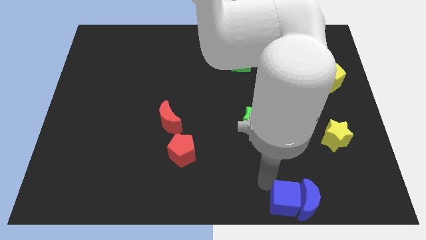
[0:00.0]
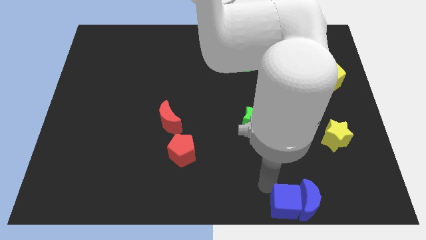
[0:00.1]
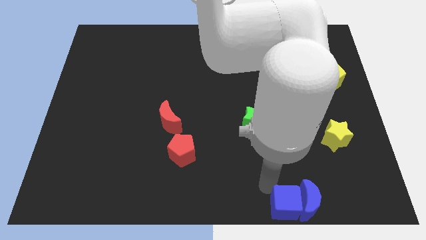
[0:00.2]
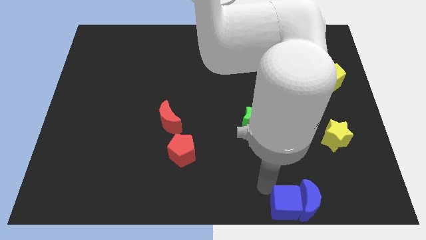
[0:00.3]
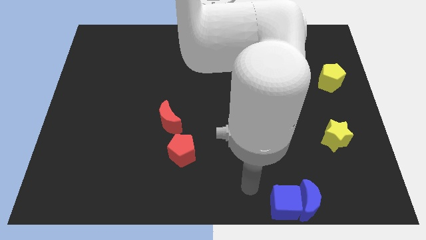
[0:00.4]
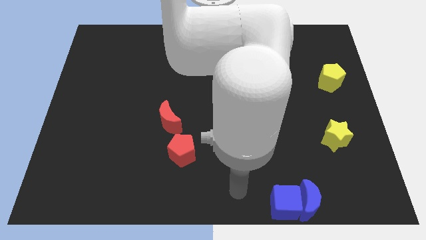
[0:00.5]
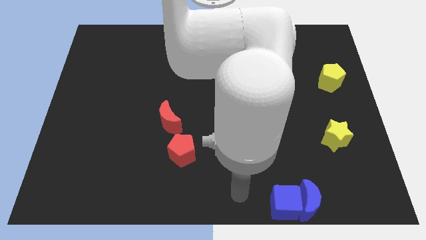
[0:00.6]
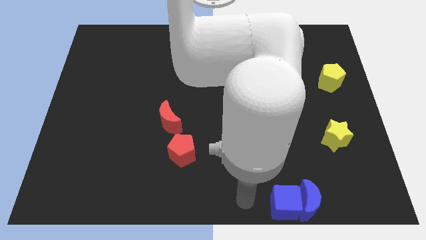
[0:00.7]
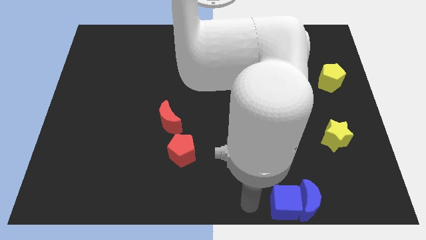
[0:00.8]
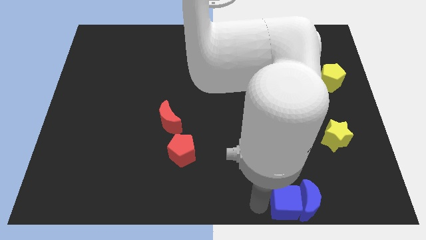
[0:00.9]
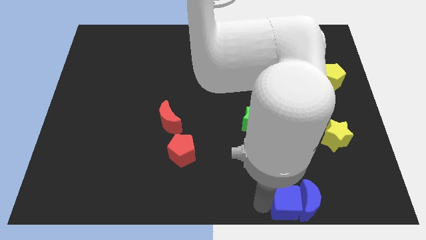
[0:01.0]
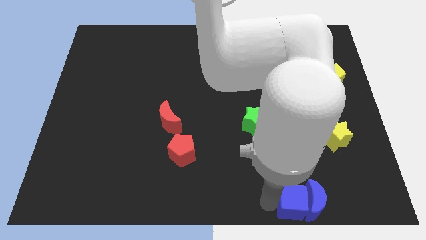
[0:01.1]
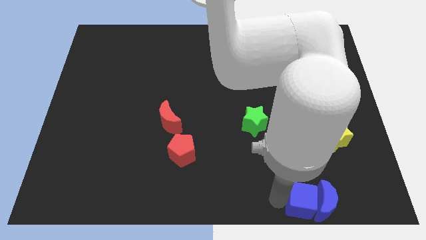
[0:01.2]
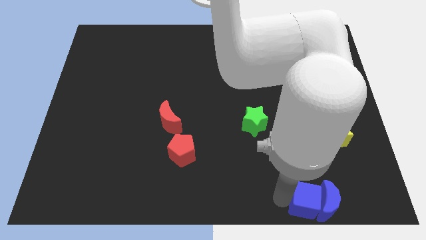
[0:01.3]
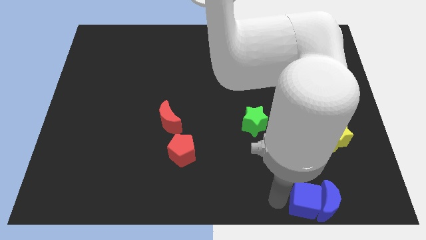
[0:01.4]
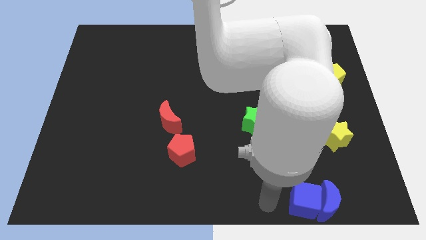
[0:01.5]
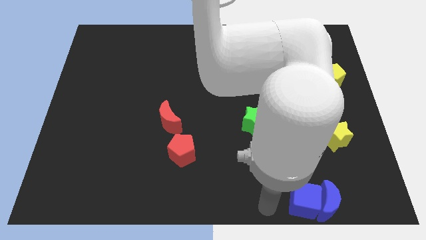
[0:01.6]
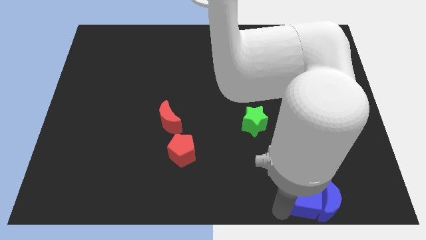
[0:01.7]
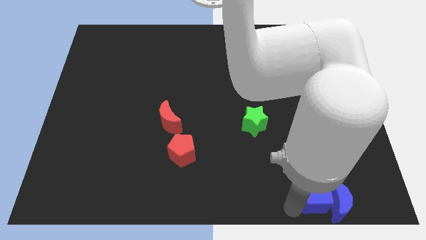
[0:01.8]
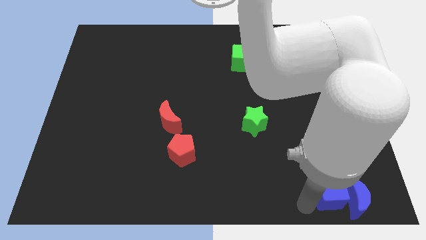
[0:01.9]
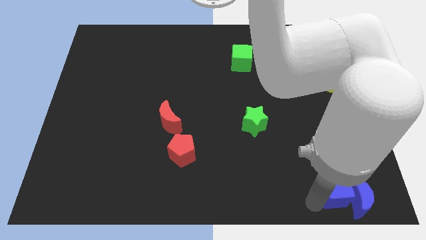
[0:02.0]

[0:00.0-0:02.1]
move the blue blocks to the bottom right side

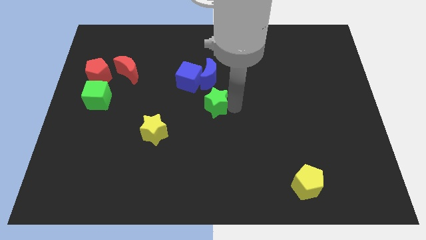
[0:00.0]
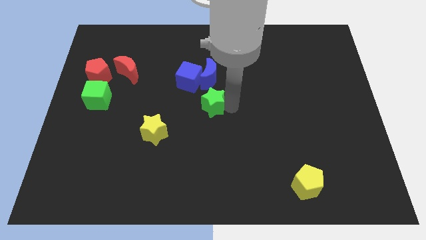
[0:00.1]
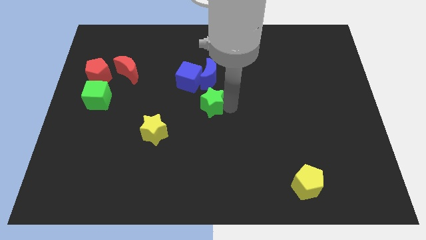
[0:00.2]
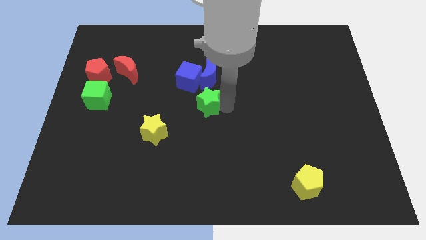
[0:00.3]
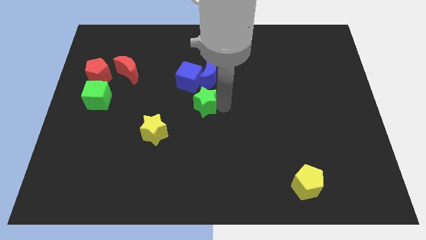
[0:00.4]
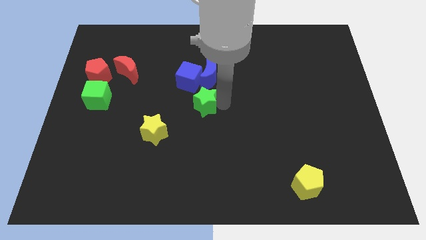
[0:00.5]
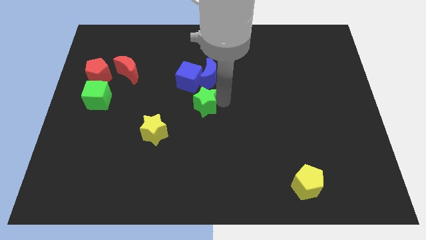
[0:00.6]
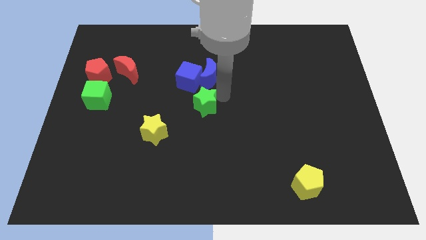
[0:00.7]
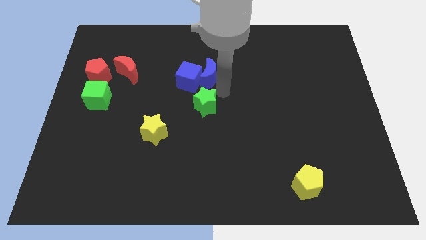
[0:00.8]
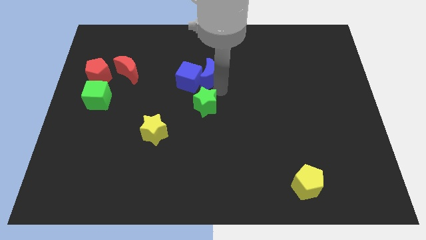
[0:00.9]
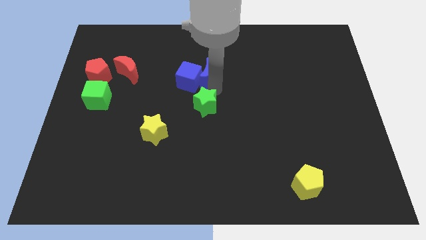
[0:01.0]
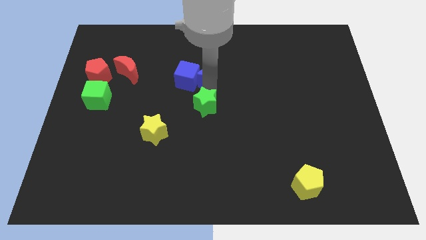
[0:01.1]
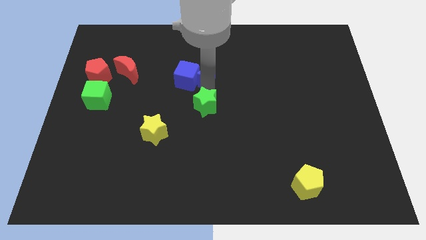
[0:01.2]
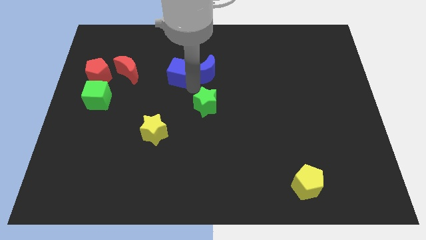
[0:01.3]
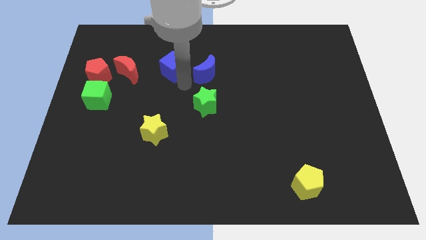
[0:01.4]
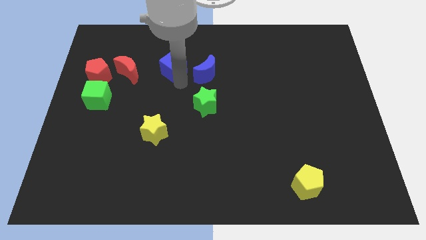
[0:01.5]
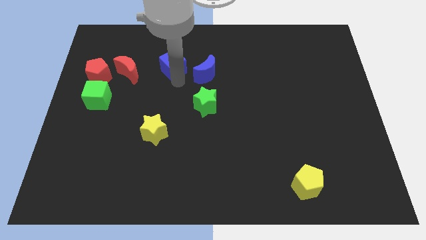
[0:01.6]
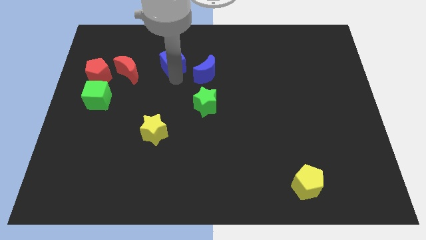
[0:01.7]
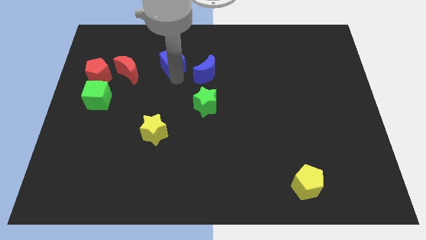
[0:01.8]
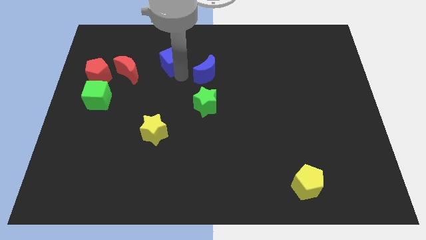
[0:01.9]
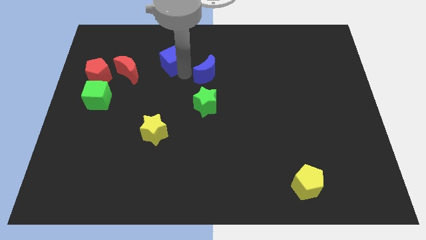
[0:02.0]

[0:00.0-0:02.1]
seperate the blue crescent and blue cube

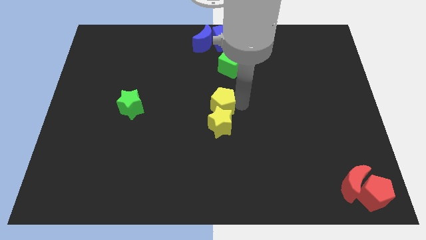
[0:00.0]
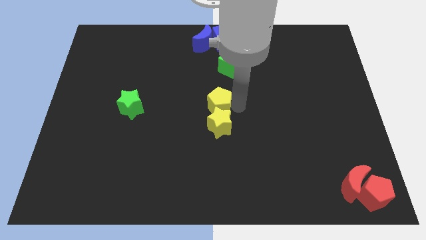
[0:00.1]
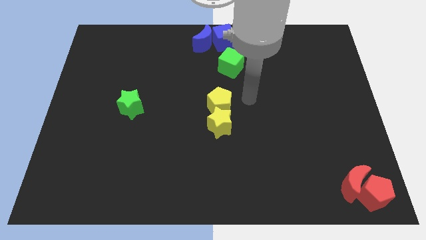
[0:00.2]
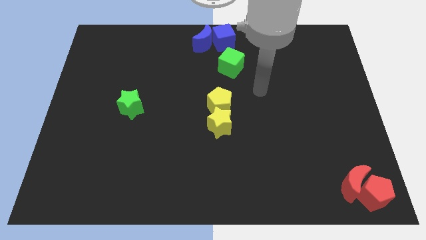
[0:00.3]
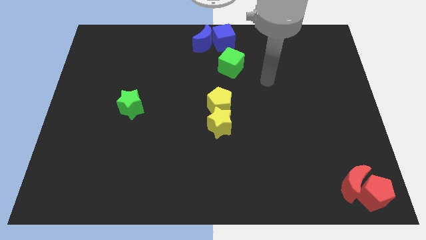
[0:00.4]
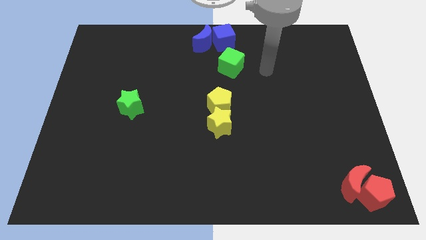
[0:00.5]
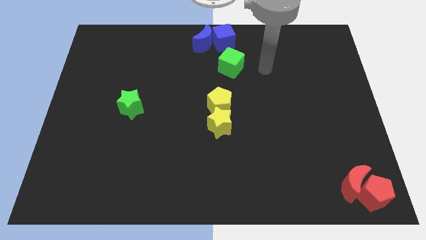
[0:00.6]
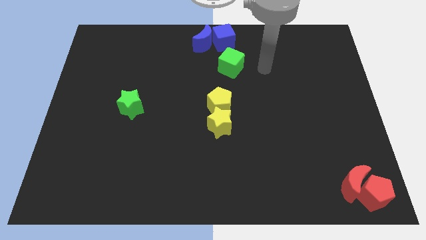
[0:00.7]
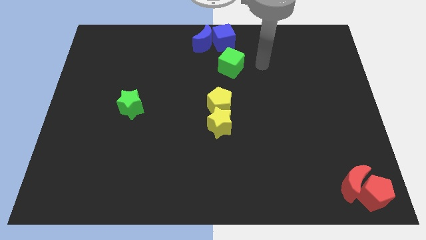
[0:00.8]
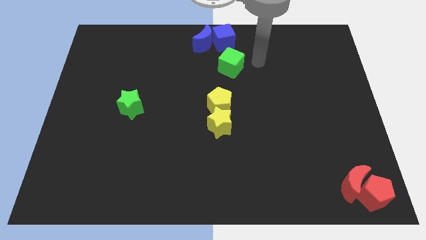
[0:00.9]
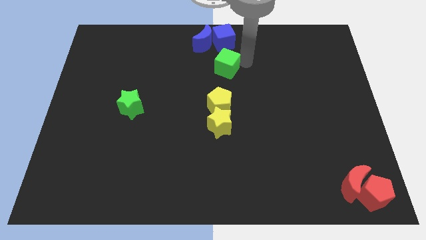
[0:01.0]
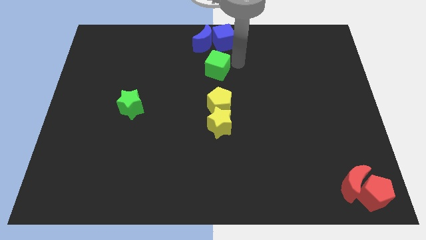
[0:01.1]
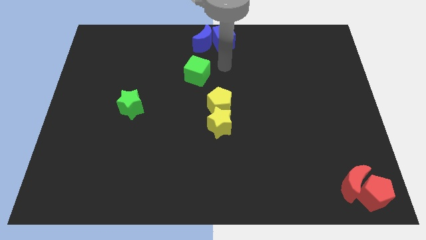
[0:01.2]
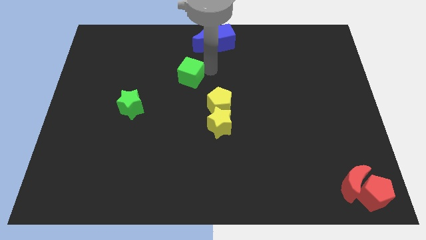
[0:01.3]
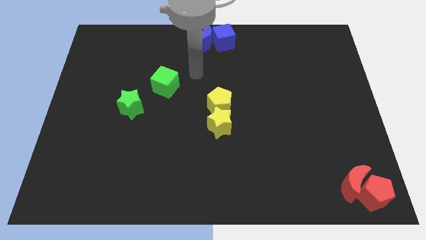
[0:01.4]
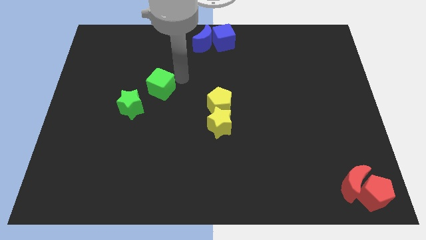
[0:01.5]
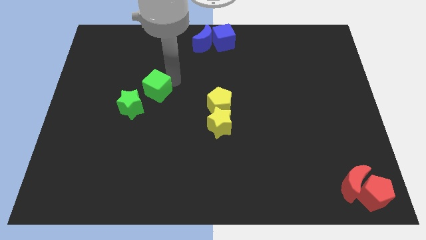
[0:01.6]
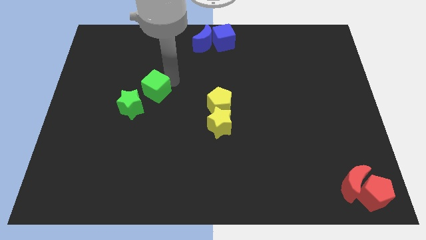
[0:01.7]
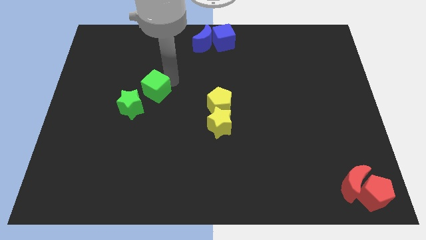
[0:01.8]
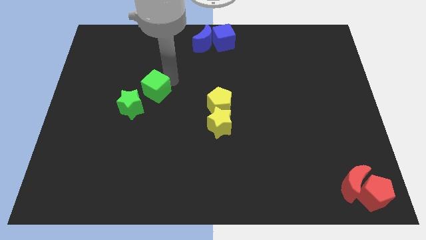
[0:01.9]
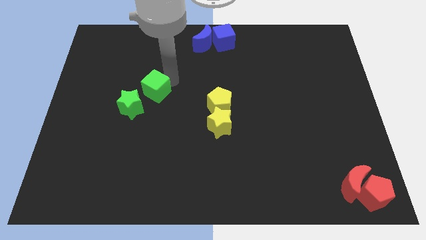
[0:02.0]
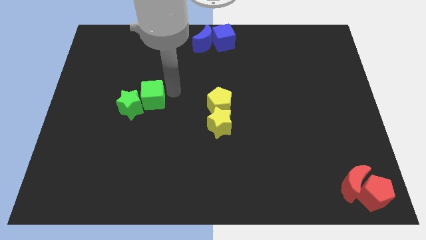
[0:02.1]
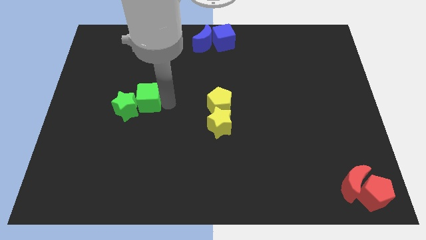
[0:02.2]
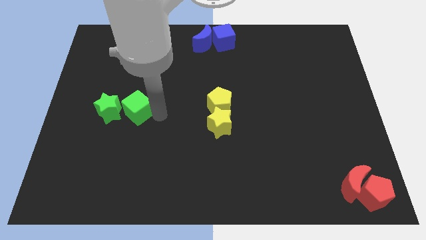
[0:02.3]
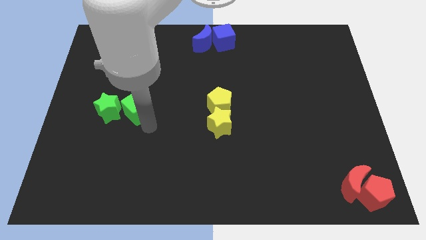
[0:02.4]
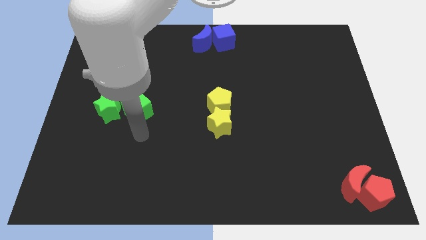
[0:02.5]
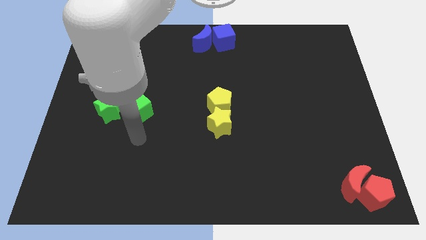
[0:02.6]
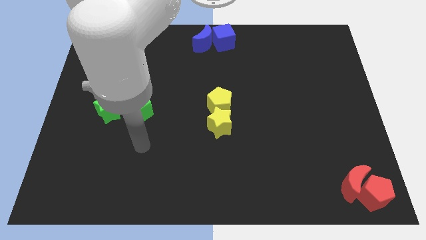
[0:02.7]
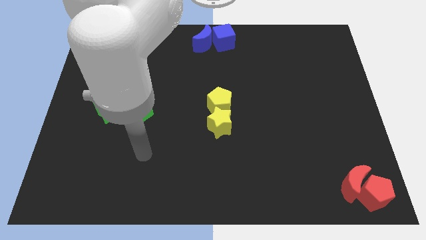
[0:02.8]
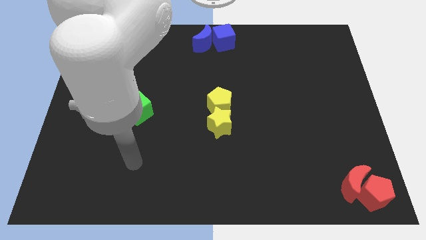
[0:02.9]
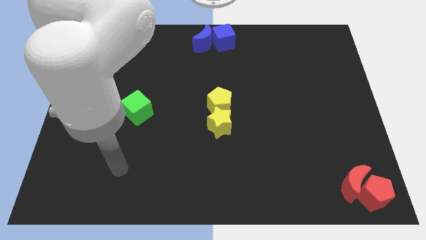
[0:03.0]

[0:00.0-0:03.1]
move the green cube into the green star

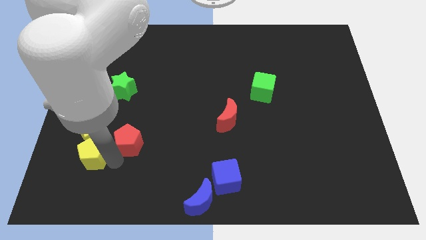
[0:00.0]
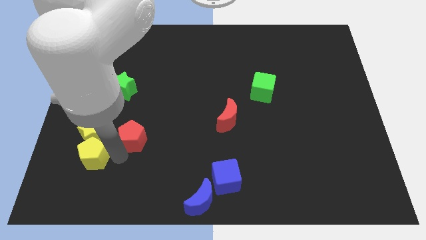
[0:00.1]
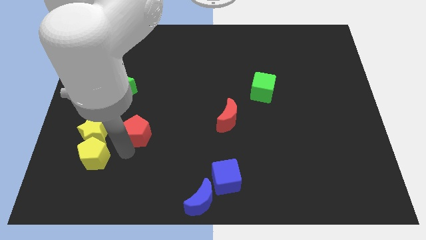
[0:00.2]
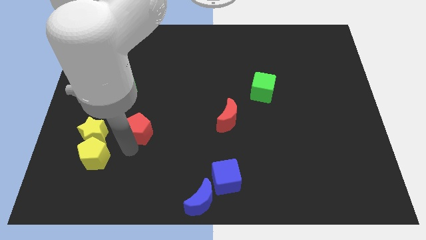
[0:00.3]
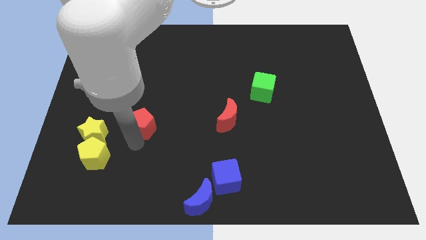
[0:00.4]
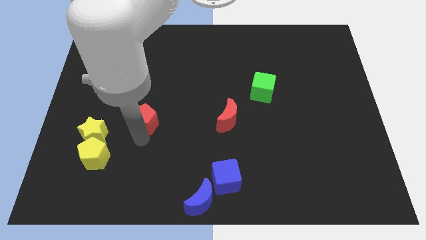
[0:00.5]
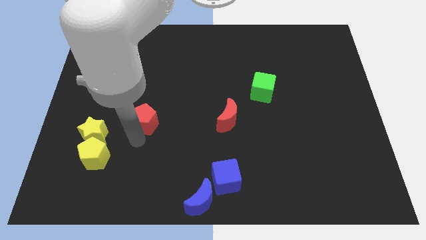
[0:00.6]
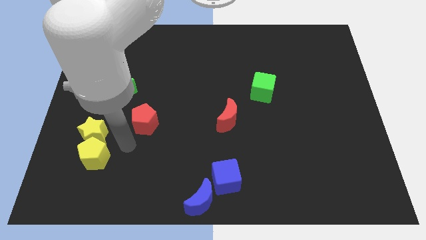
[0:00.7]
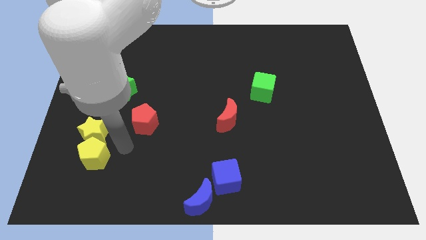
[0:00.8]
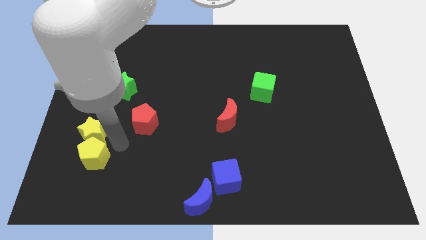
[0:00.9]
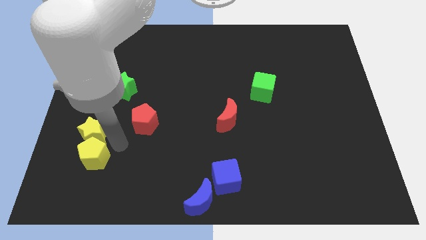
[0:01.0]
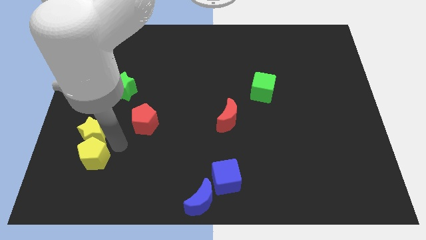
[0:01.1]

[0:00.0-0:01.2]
move the red pentagon away from the yellow pentagon

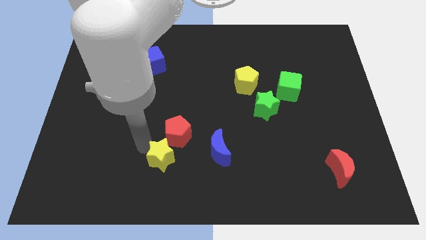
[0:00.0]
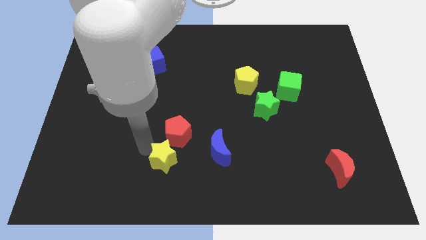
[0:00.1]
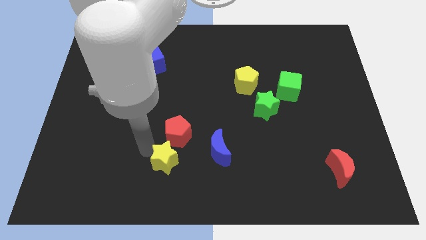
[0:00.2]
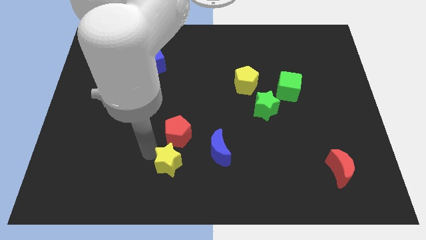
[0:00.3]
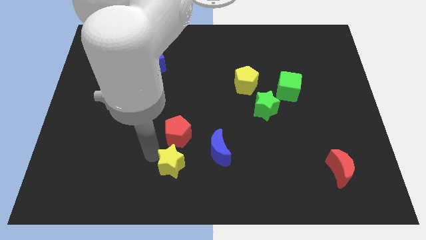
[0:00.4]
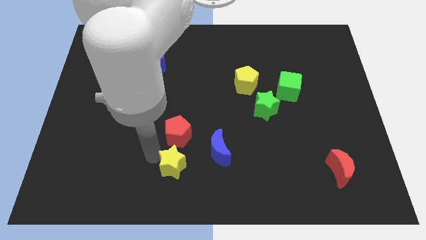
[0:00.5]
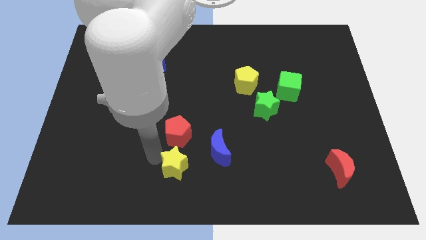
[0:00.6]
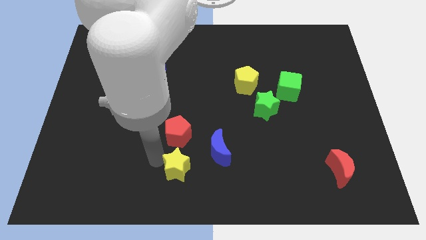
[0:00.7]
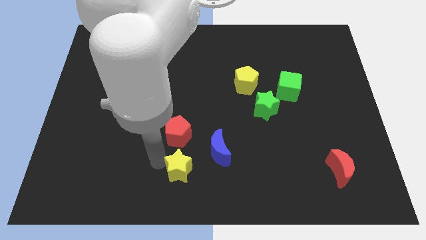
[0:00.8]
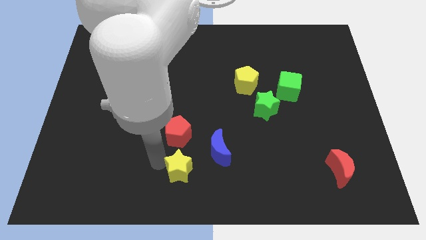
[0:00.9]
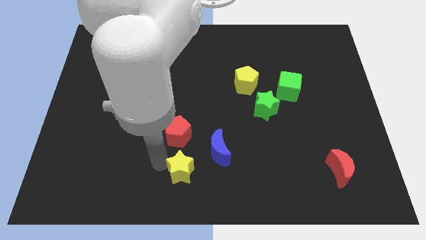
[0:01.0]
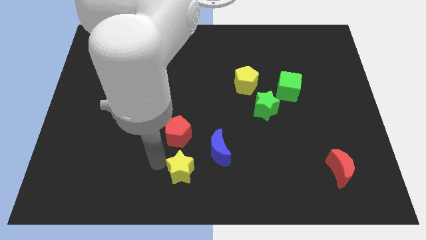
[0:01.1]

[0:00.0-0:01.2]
move the yellow star below the red pentagon
